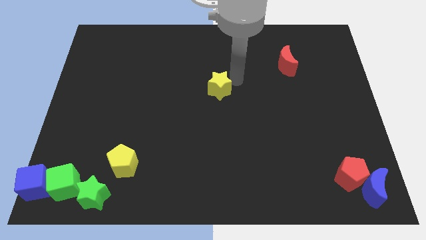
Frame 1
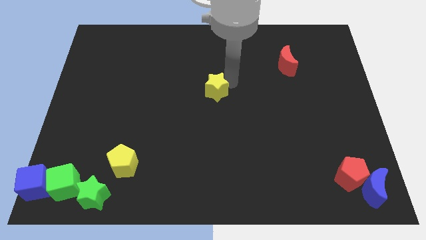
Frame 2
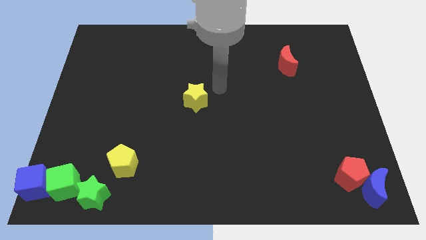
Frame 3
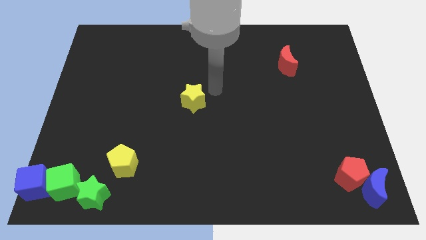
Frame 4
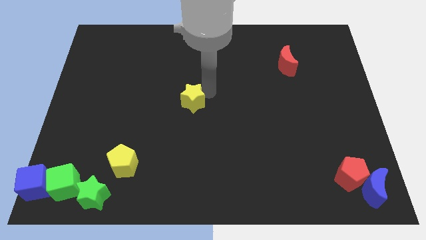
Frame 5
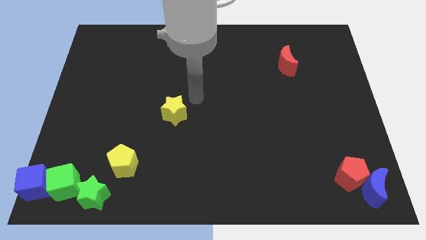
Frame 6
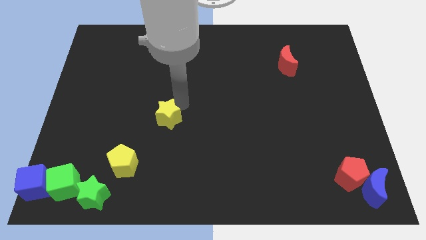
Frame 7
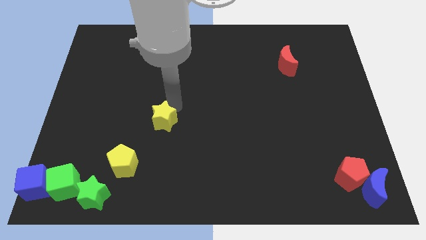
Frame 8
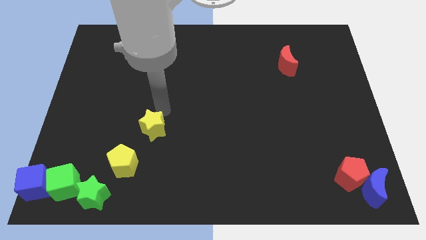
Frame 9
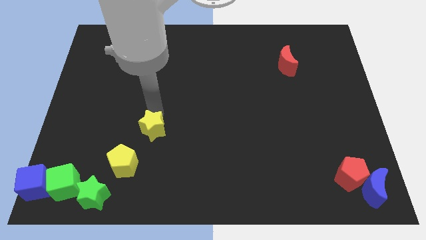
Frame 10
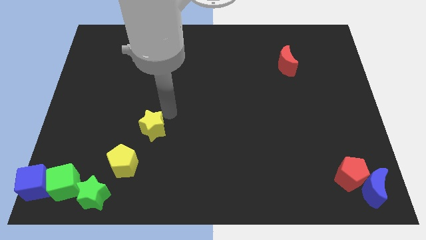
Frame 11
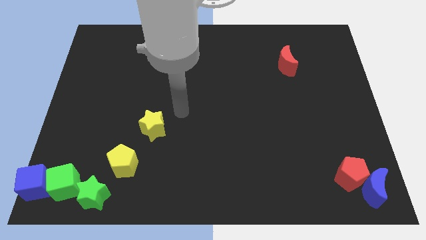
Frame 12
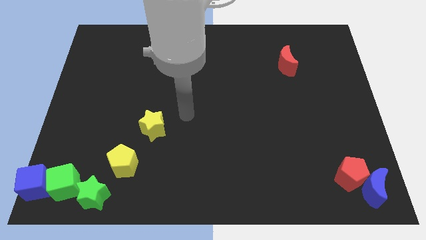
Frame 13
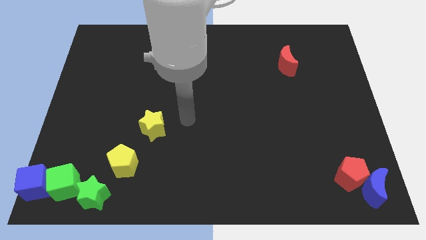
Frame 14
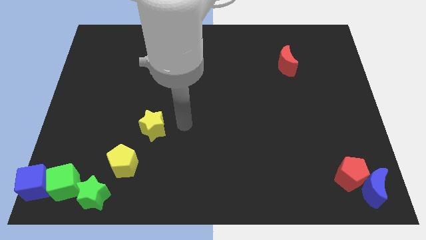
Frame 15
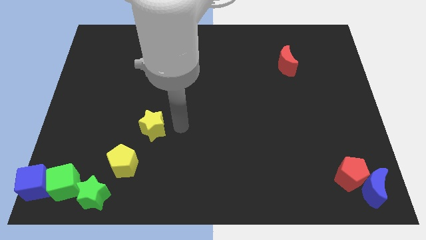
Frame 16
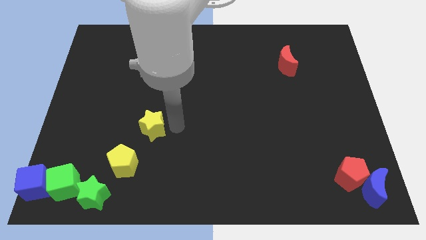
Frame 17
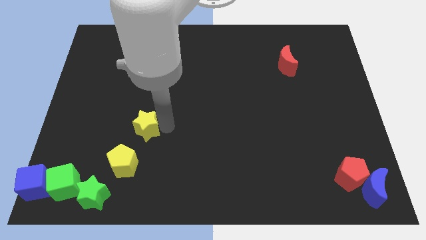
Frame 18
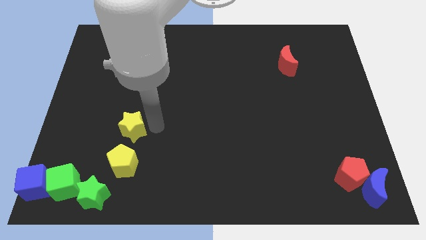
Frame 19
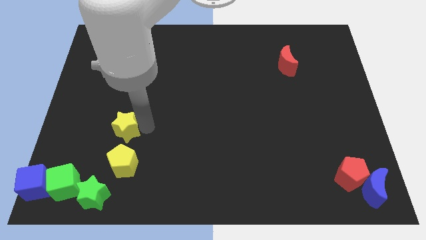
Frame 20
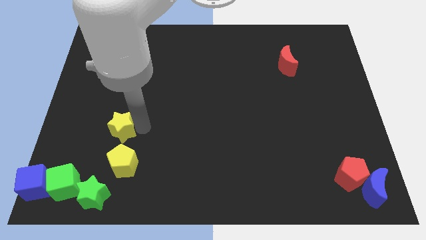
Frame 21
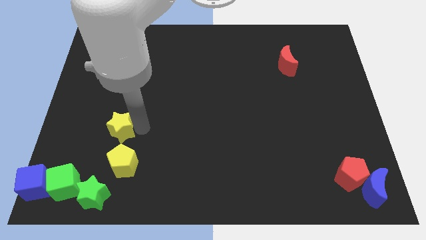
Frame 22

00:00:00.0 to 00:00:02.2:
push yellow star above yellow pentagon

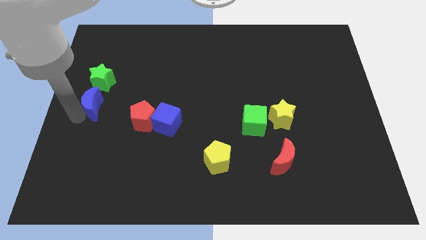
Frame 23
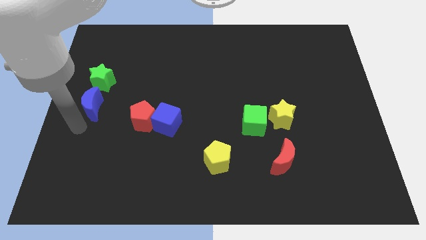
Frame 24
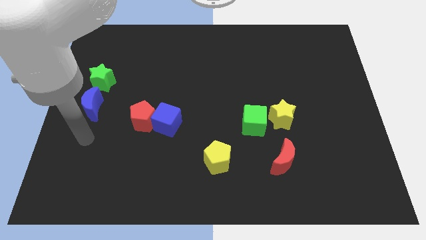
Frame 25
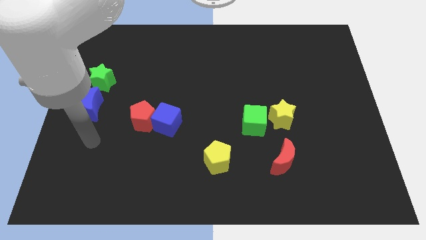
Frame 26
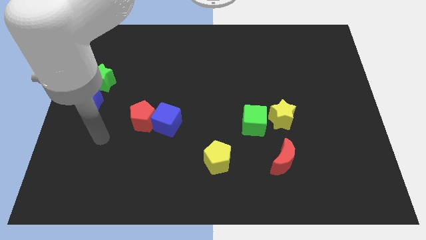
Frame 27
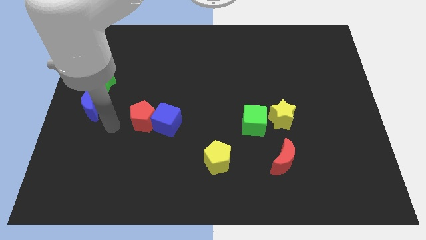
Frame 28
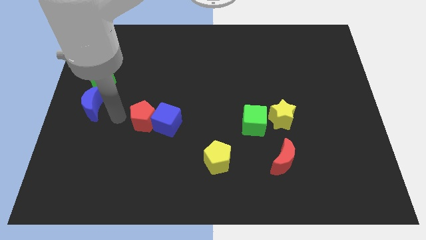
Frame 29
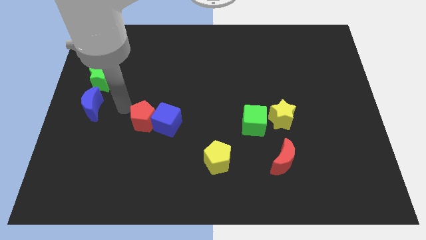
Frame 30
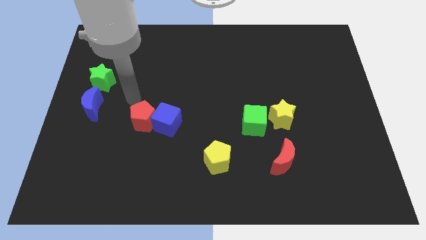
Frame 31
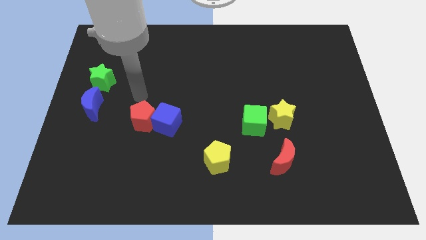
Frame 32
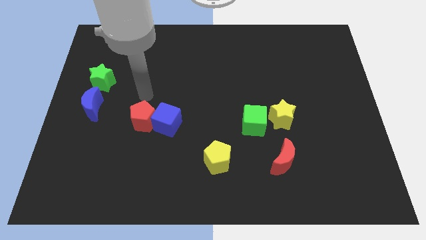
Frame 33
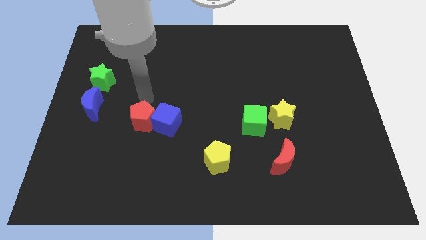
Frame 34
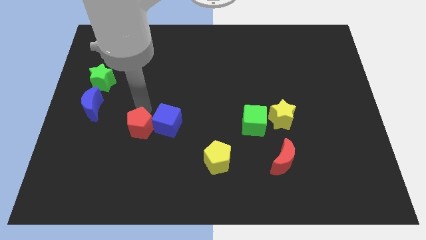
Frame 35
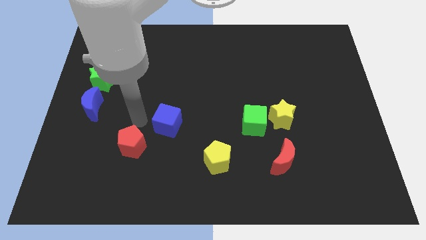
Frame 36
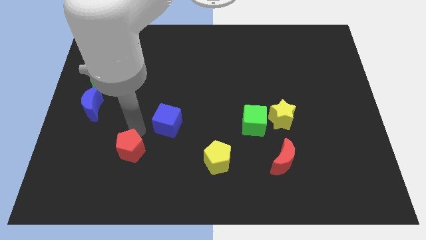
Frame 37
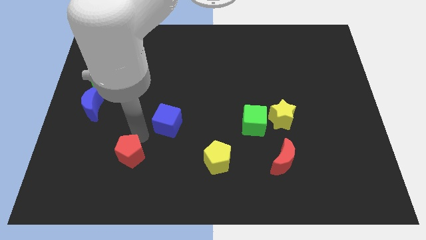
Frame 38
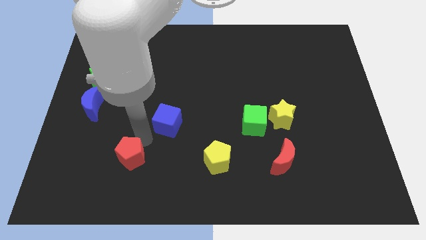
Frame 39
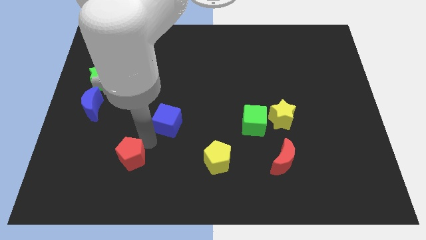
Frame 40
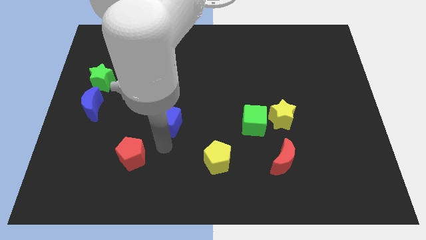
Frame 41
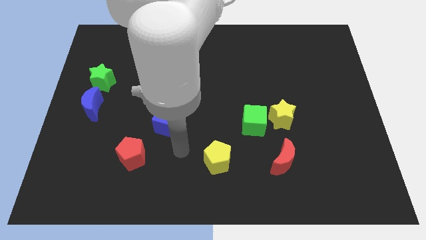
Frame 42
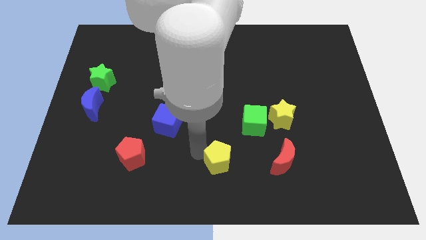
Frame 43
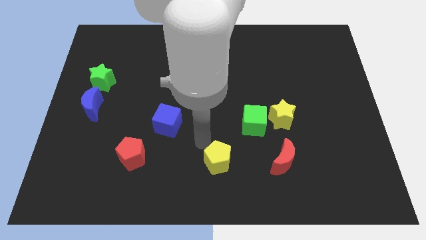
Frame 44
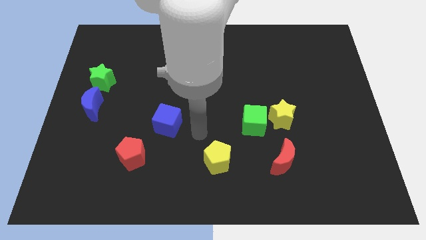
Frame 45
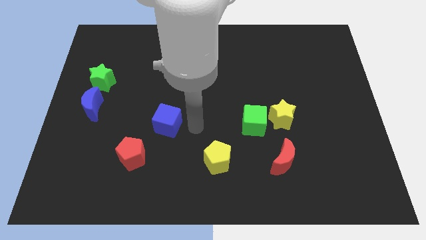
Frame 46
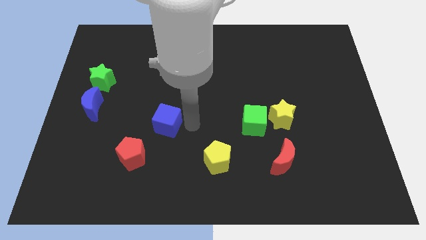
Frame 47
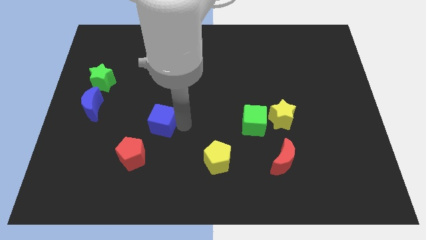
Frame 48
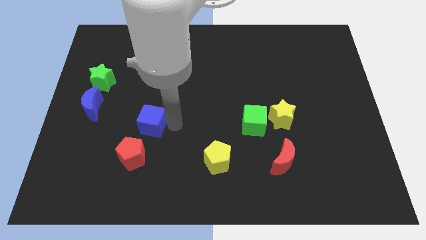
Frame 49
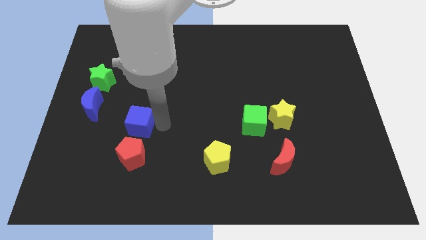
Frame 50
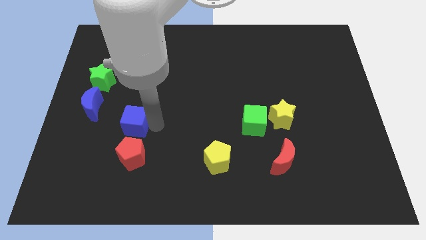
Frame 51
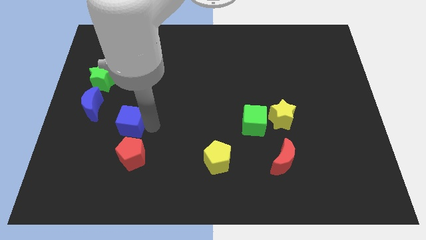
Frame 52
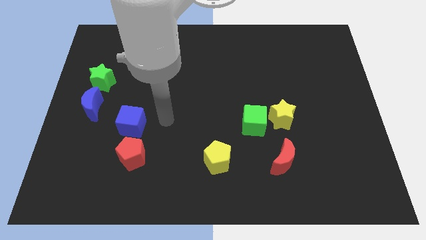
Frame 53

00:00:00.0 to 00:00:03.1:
place the red pentagon vertically below the blue cube

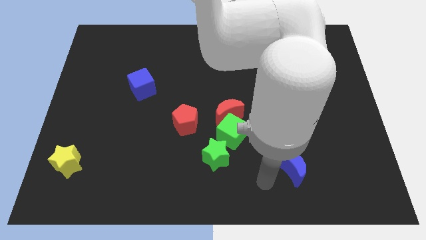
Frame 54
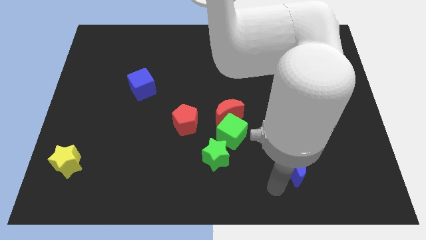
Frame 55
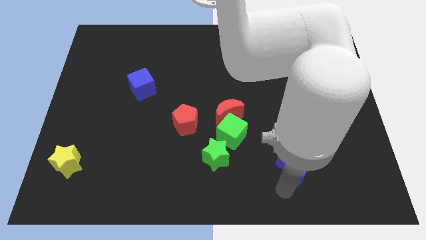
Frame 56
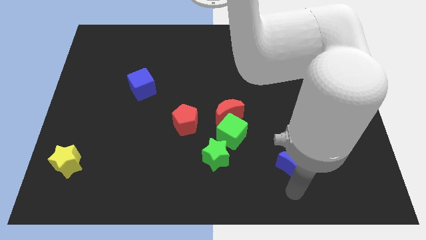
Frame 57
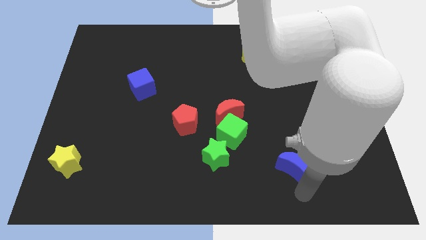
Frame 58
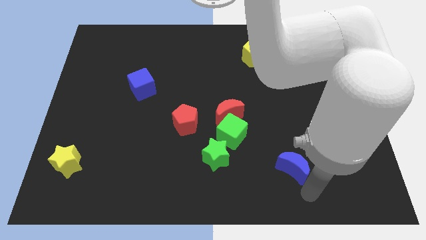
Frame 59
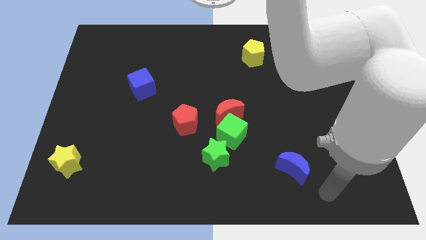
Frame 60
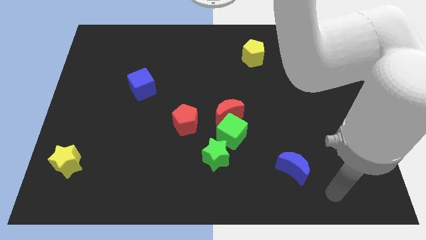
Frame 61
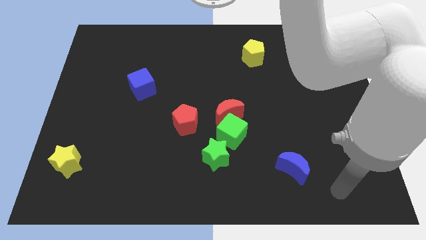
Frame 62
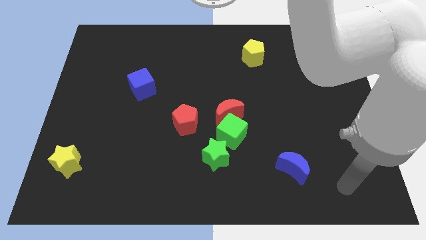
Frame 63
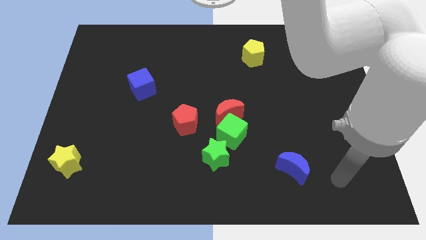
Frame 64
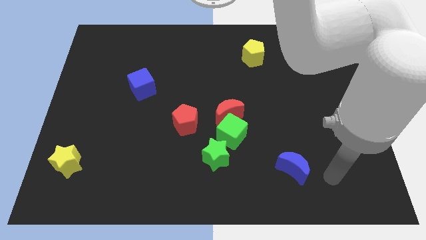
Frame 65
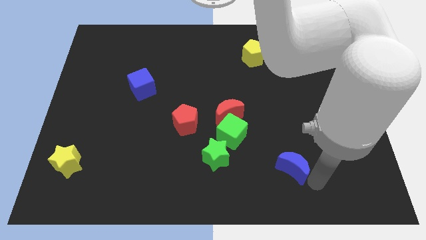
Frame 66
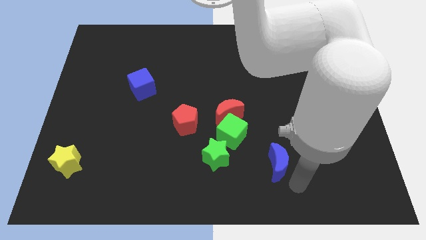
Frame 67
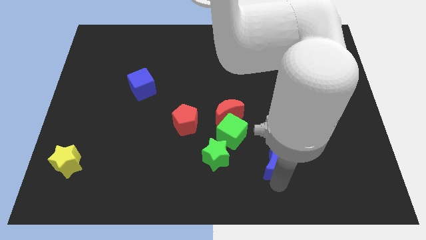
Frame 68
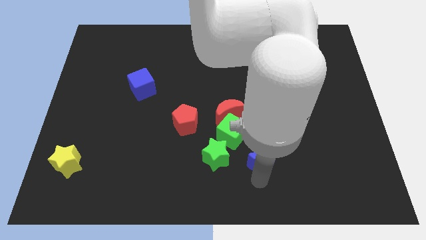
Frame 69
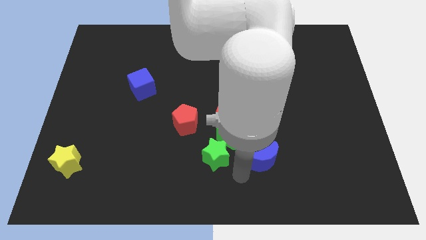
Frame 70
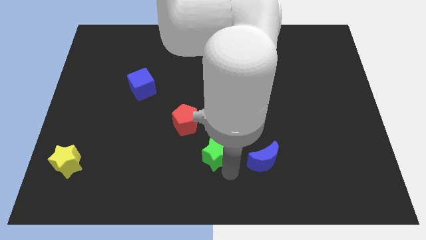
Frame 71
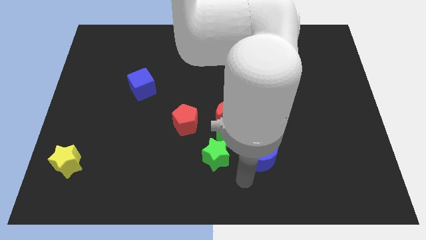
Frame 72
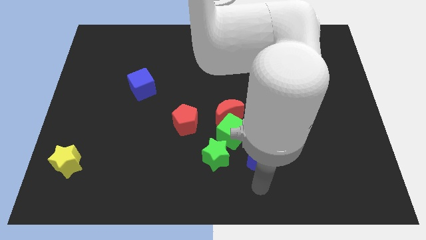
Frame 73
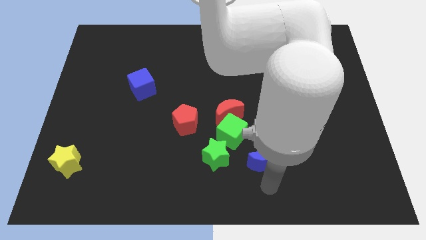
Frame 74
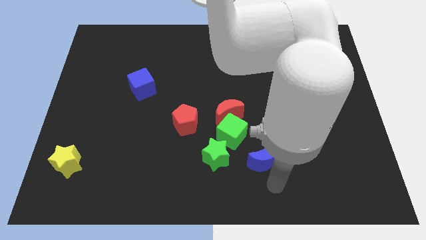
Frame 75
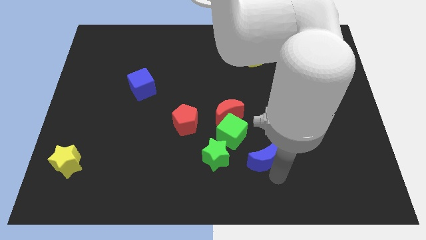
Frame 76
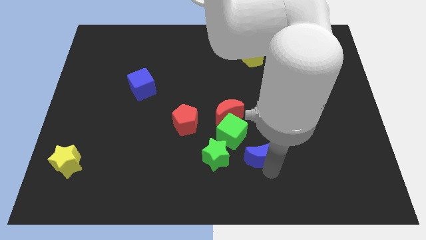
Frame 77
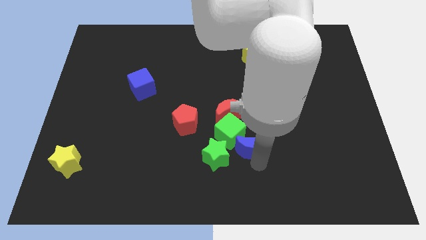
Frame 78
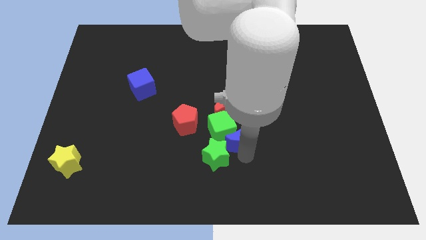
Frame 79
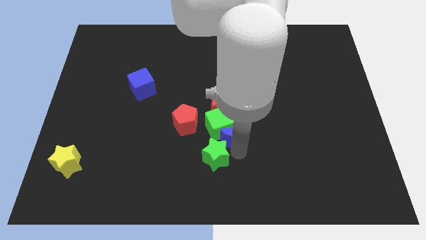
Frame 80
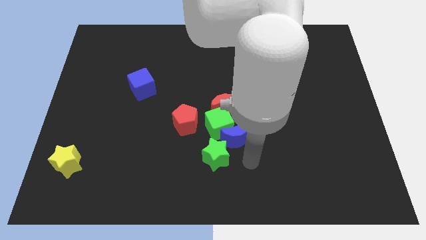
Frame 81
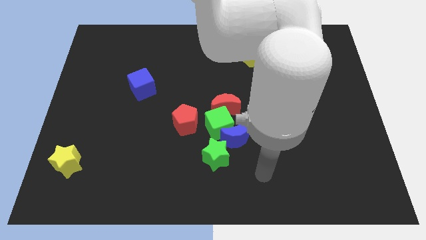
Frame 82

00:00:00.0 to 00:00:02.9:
push the blue crescent to the top right of the green star

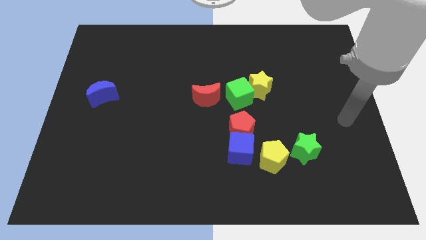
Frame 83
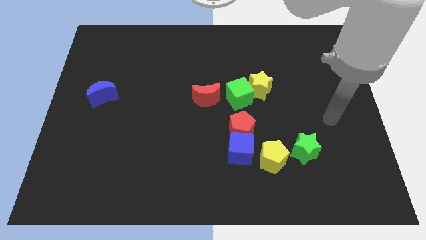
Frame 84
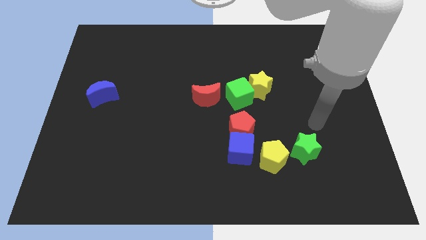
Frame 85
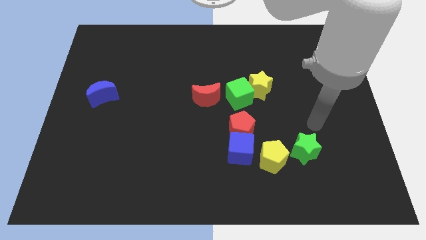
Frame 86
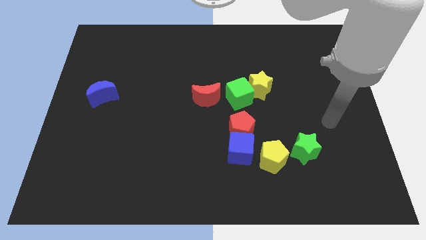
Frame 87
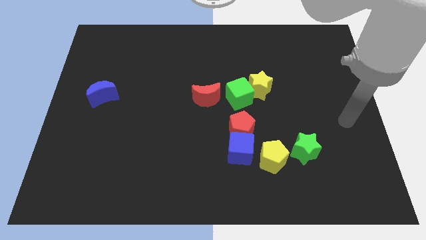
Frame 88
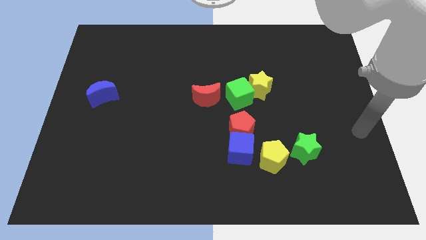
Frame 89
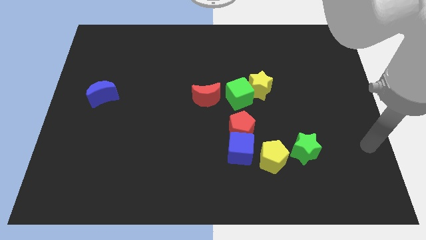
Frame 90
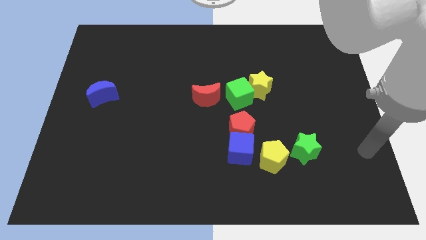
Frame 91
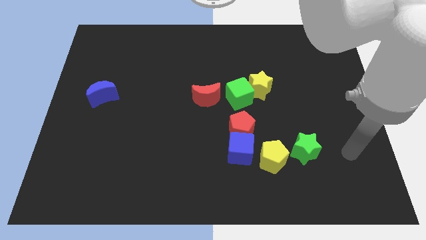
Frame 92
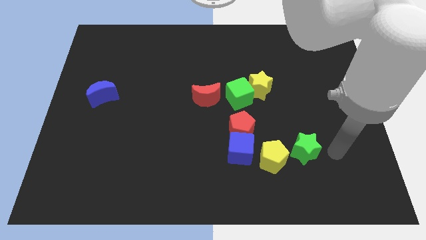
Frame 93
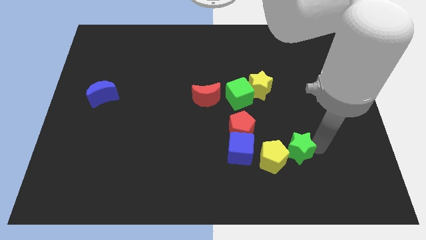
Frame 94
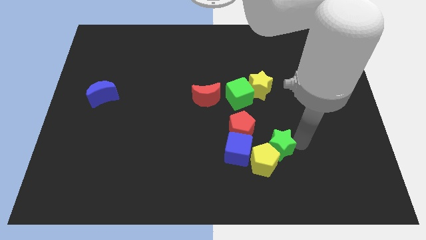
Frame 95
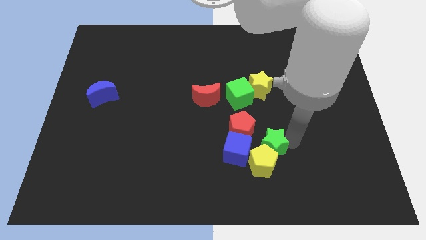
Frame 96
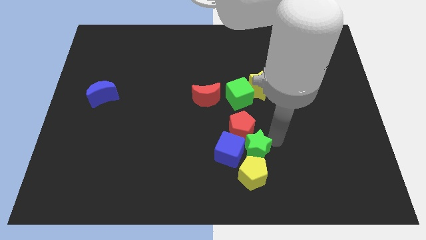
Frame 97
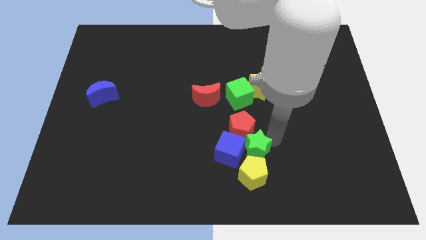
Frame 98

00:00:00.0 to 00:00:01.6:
place green star above yellow pentagon
